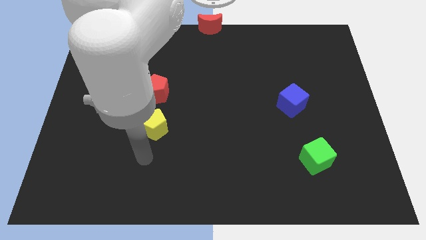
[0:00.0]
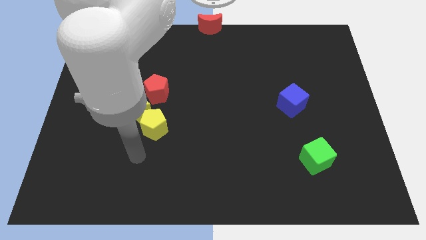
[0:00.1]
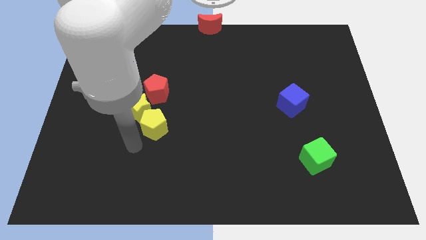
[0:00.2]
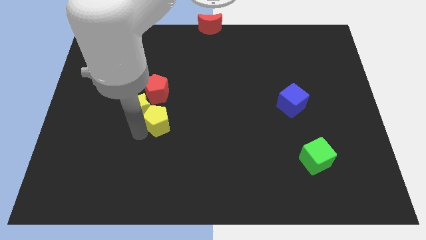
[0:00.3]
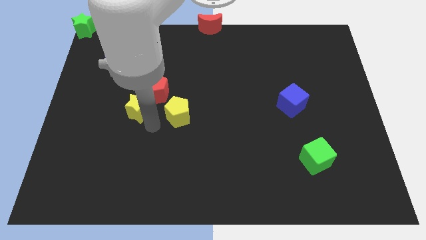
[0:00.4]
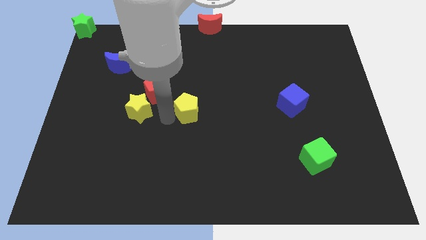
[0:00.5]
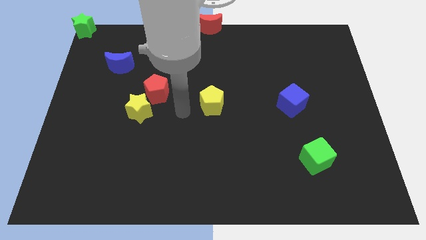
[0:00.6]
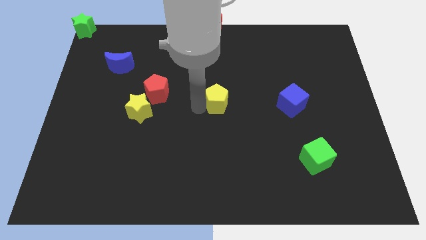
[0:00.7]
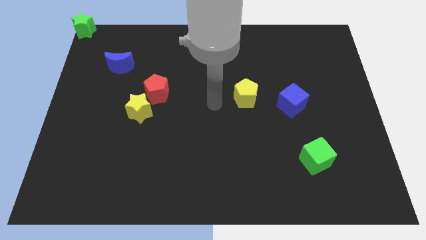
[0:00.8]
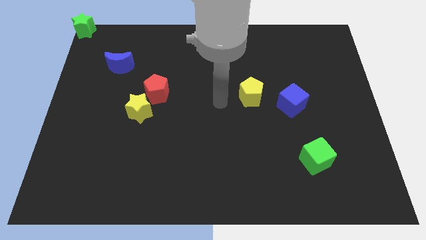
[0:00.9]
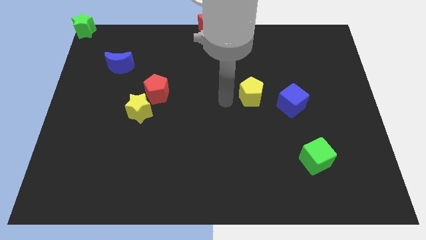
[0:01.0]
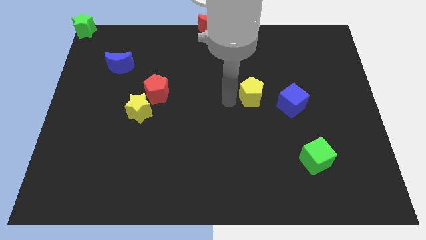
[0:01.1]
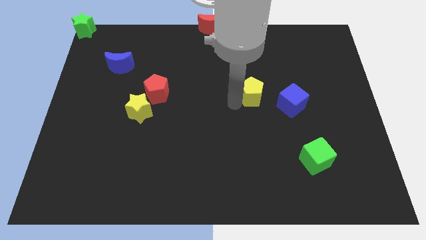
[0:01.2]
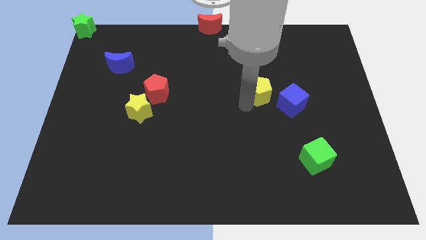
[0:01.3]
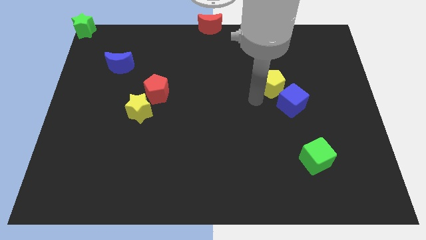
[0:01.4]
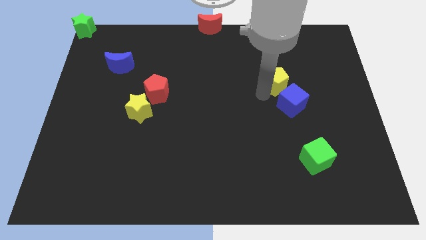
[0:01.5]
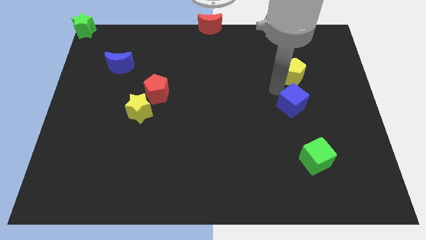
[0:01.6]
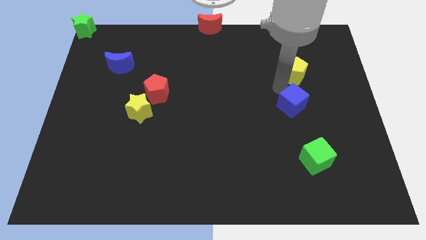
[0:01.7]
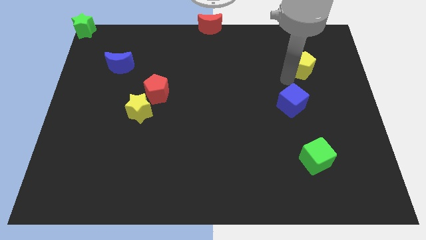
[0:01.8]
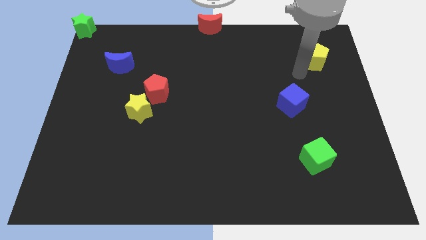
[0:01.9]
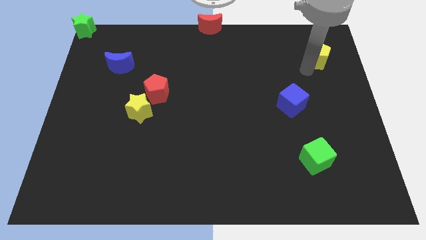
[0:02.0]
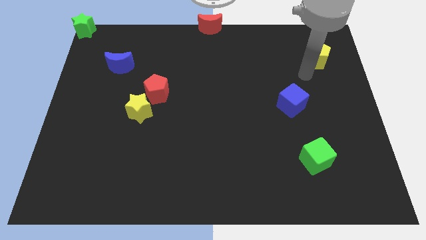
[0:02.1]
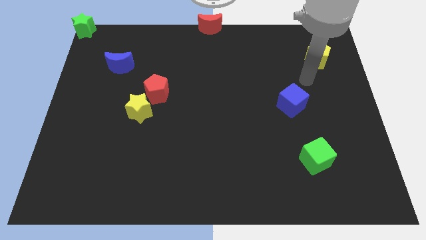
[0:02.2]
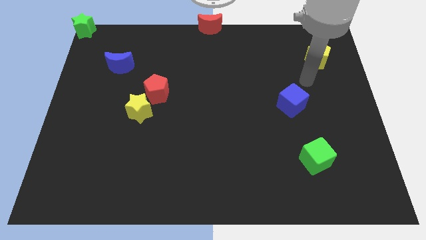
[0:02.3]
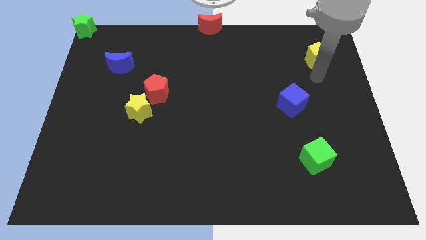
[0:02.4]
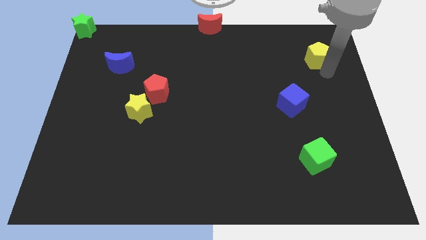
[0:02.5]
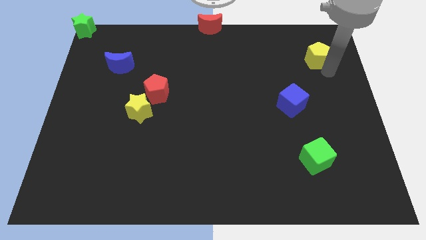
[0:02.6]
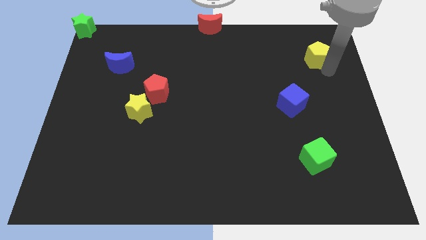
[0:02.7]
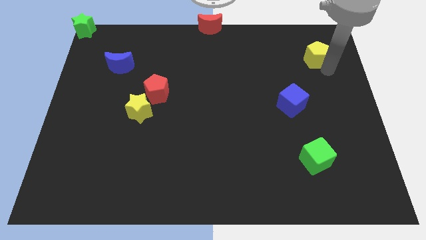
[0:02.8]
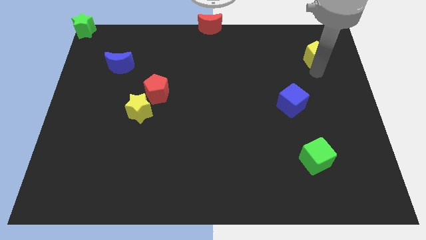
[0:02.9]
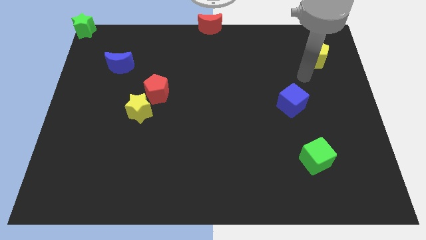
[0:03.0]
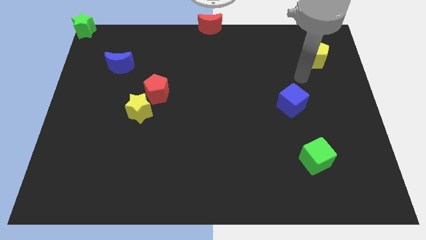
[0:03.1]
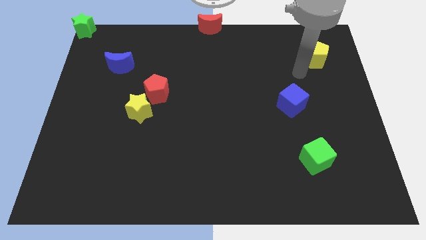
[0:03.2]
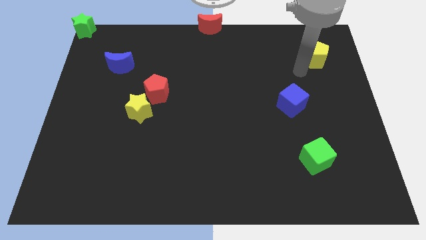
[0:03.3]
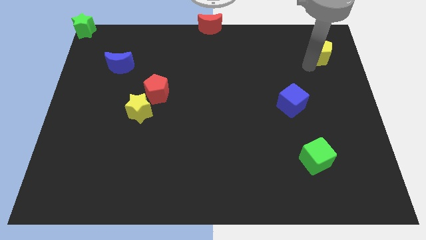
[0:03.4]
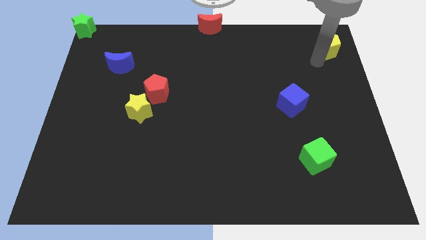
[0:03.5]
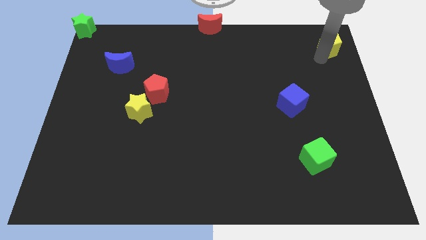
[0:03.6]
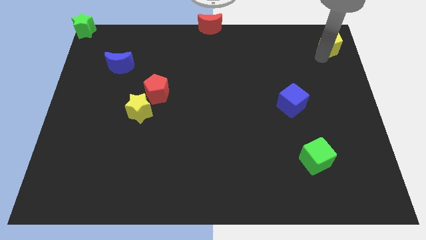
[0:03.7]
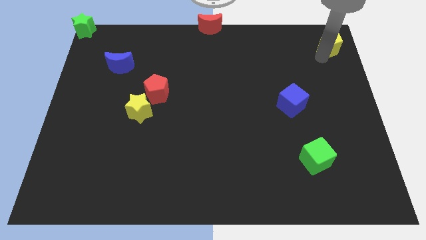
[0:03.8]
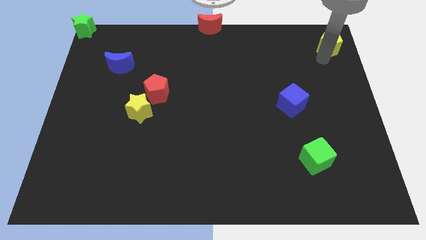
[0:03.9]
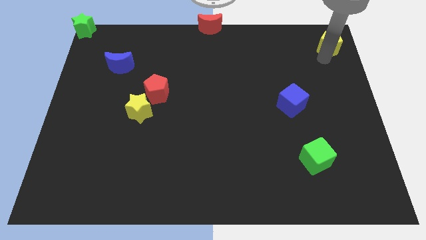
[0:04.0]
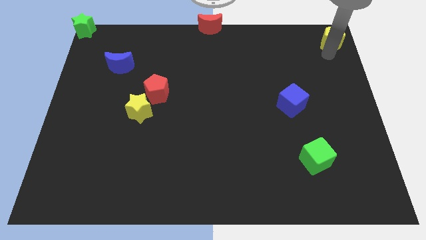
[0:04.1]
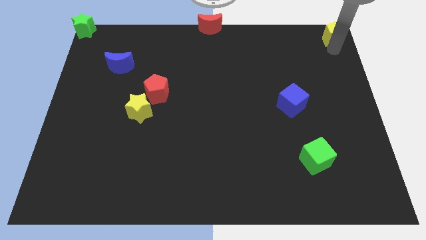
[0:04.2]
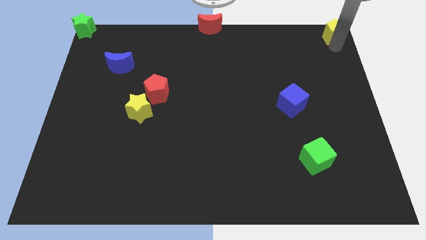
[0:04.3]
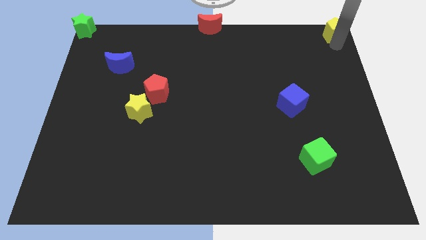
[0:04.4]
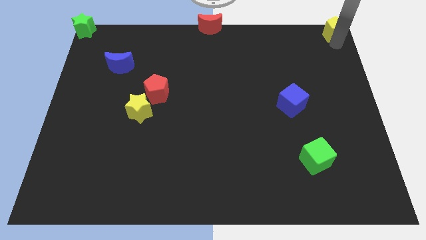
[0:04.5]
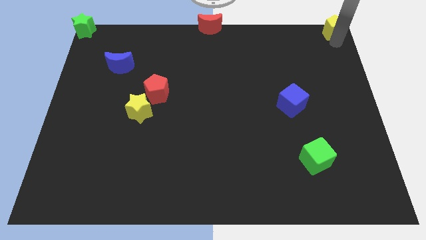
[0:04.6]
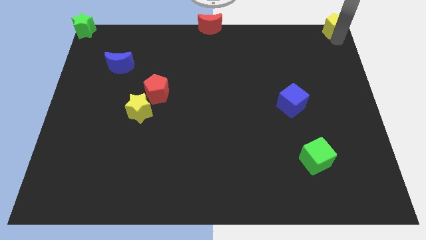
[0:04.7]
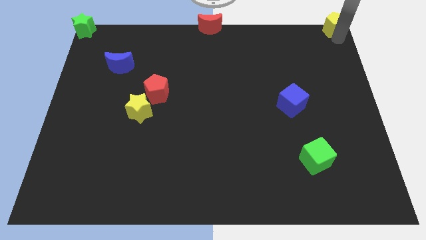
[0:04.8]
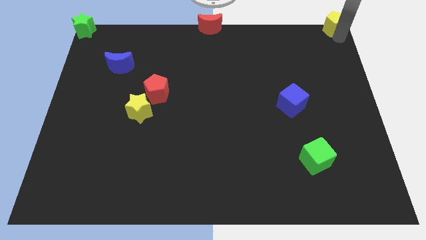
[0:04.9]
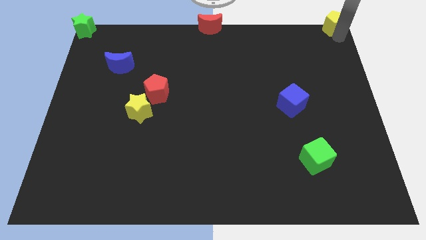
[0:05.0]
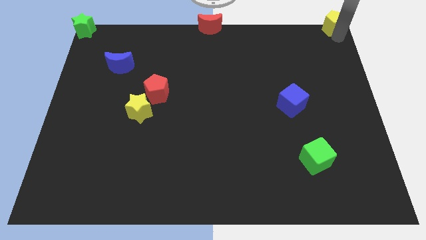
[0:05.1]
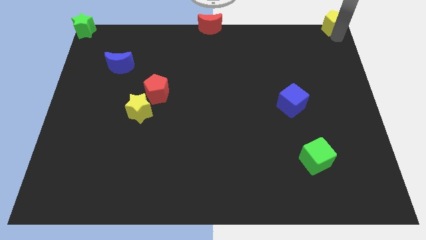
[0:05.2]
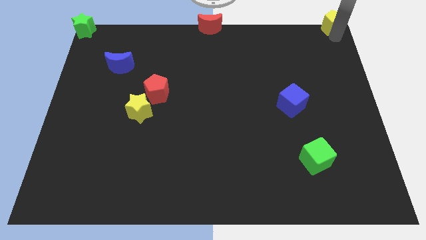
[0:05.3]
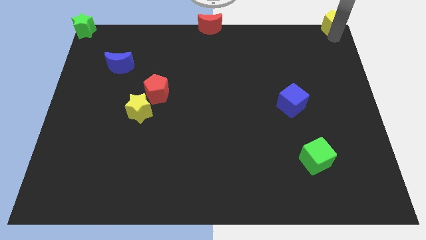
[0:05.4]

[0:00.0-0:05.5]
move yellow pentagon to the top right corner of the board

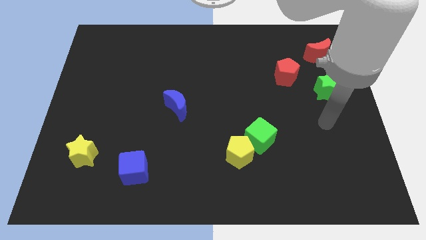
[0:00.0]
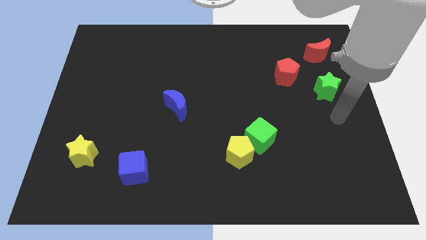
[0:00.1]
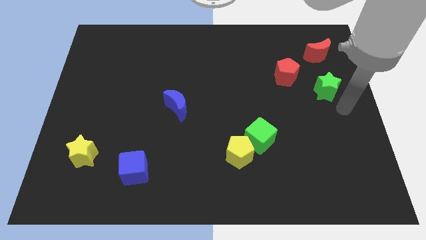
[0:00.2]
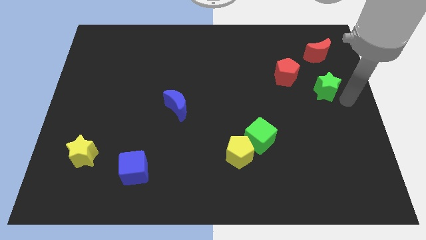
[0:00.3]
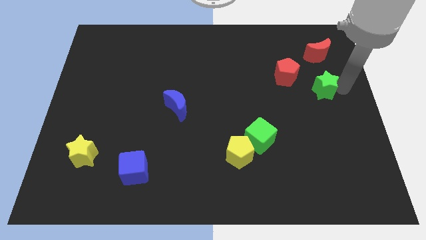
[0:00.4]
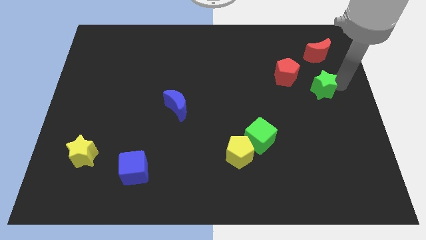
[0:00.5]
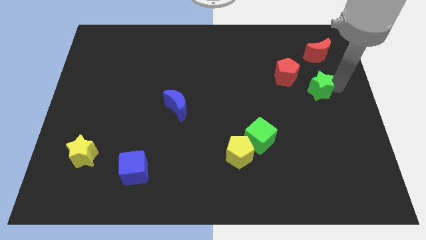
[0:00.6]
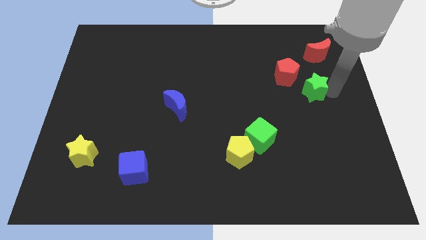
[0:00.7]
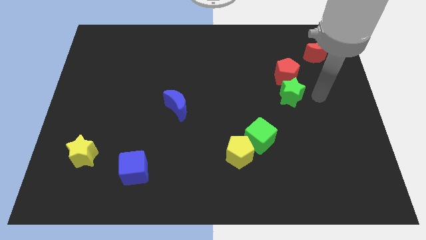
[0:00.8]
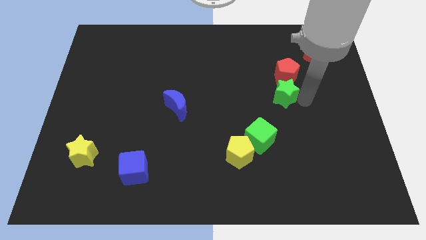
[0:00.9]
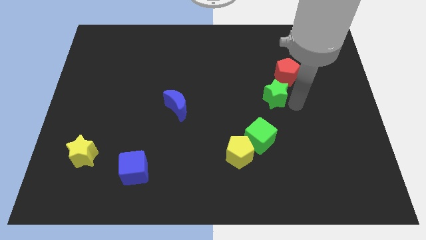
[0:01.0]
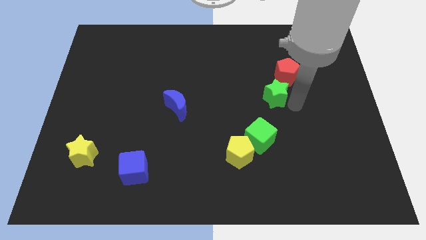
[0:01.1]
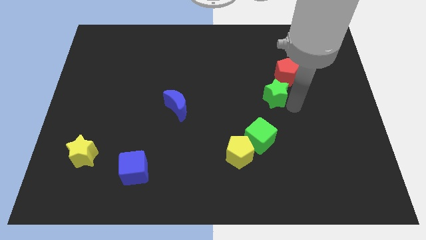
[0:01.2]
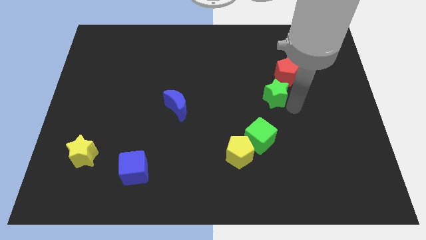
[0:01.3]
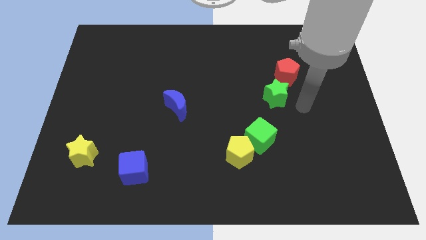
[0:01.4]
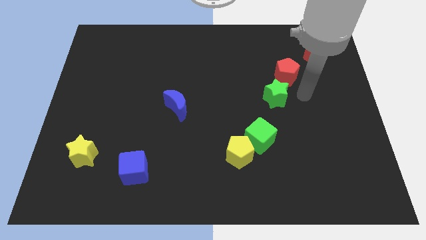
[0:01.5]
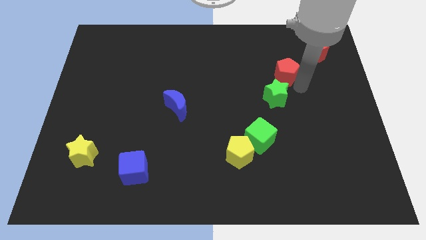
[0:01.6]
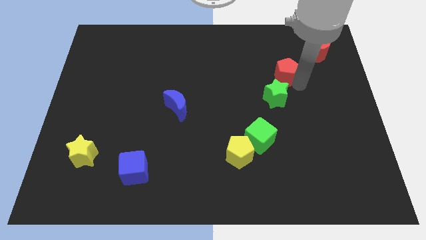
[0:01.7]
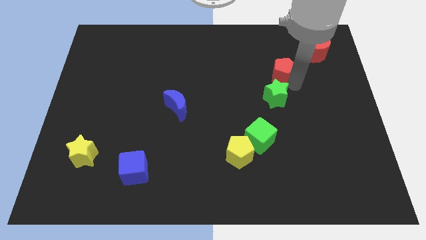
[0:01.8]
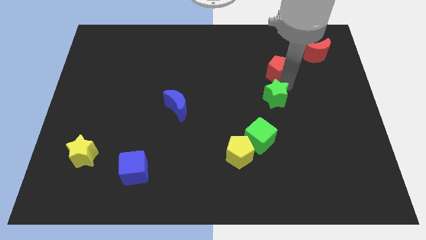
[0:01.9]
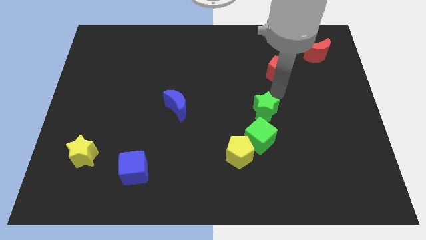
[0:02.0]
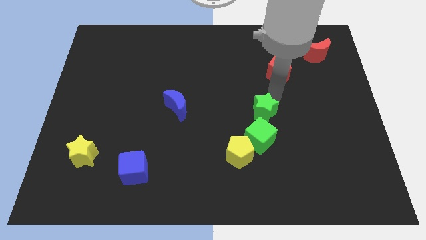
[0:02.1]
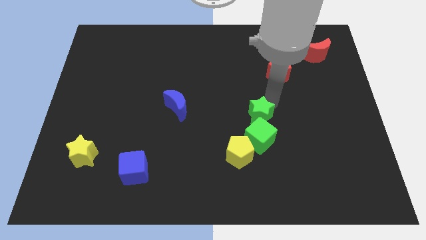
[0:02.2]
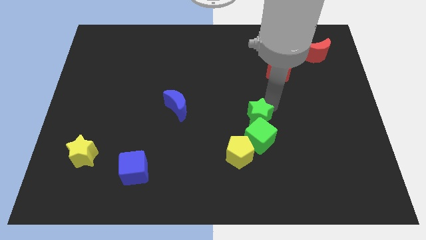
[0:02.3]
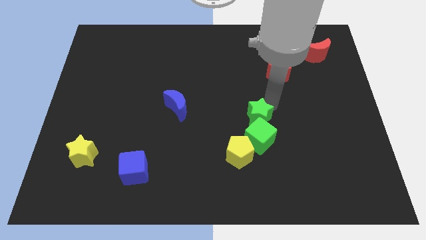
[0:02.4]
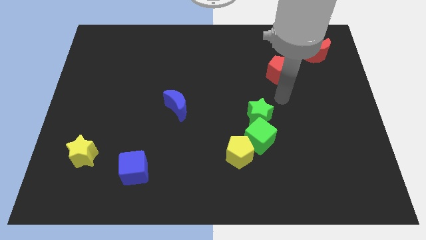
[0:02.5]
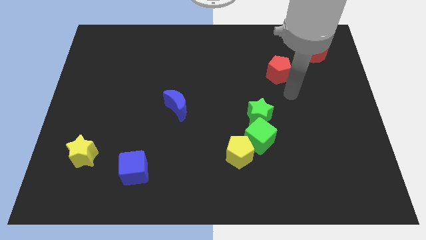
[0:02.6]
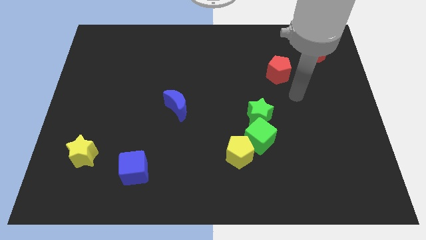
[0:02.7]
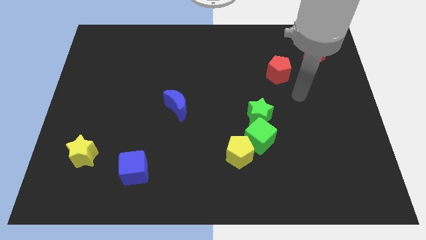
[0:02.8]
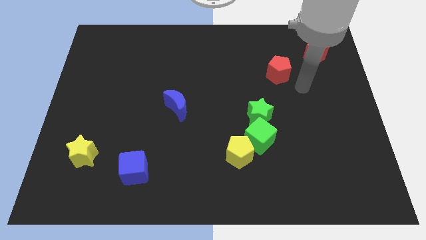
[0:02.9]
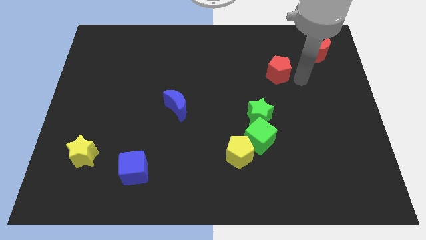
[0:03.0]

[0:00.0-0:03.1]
place the green star above the green cube

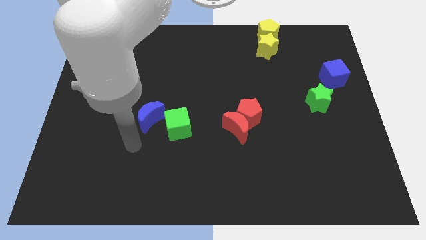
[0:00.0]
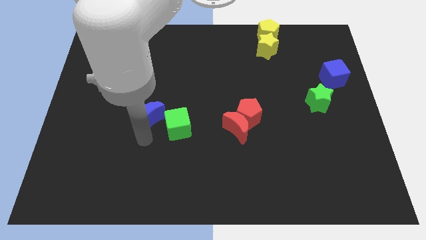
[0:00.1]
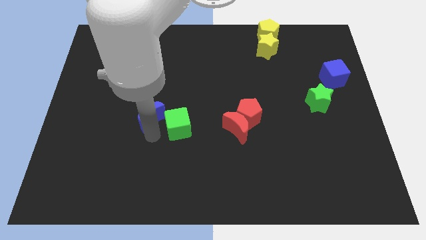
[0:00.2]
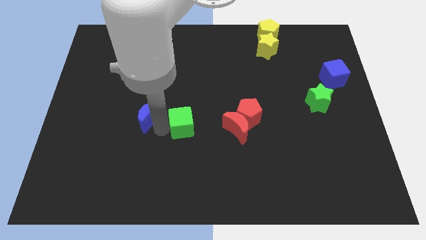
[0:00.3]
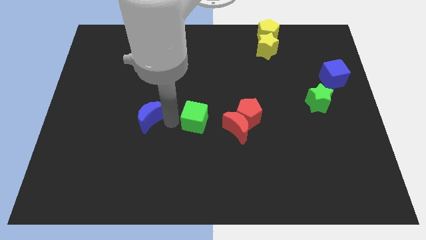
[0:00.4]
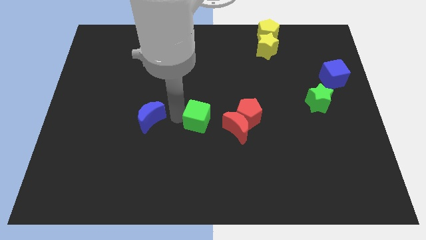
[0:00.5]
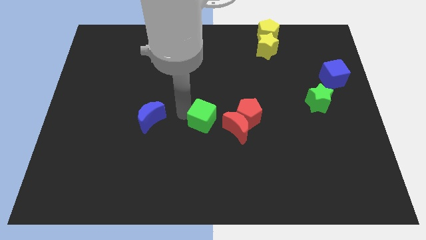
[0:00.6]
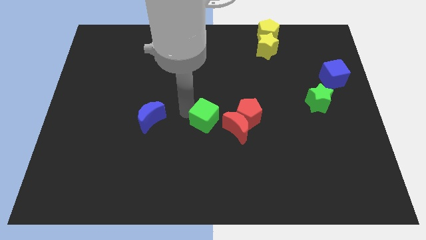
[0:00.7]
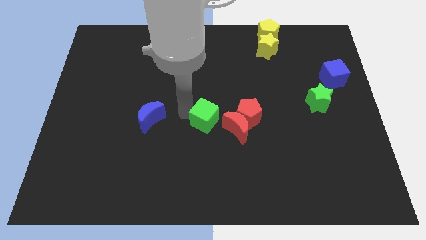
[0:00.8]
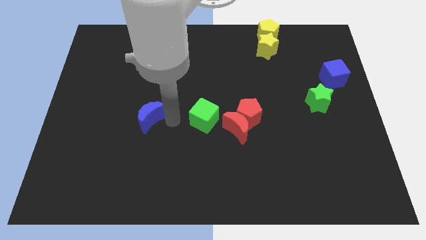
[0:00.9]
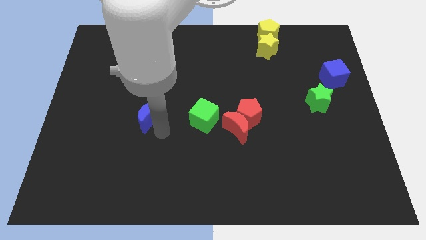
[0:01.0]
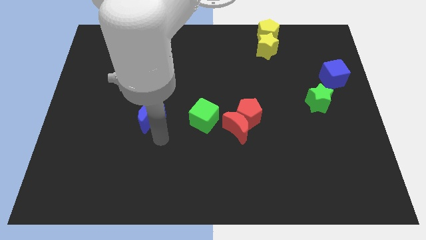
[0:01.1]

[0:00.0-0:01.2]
push the green cube close to the red crescent
